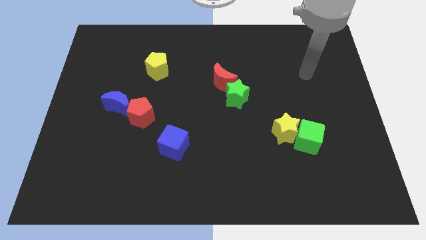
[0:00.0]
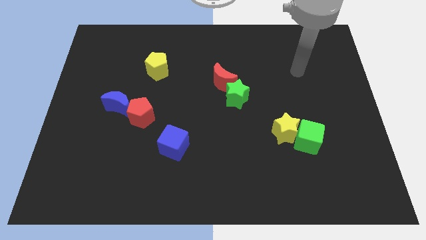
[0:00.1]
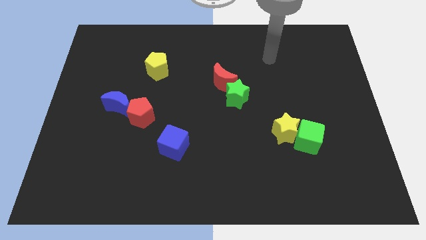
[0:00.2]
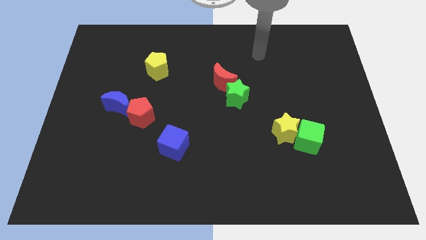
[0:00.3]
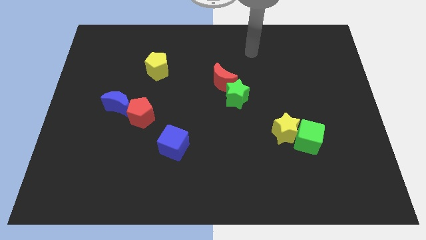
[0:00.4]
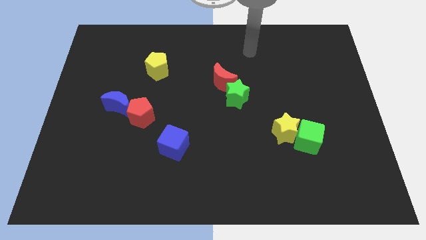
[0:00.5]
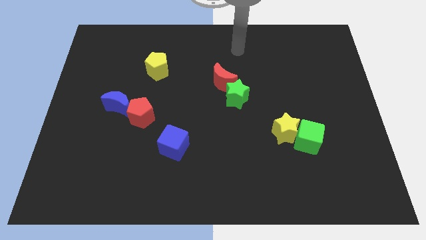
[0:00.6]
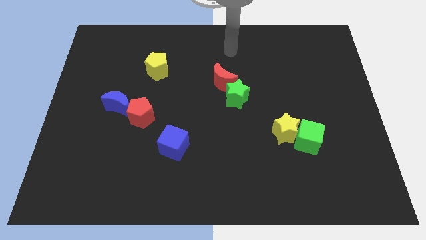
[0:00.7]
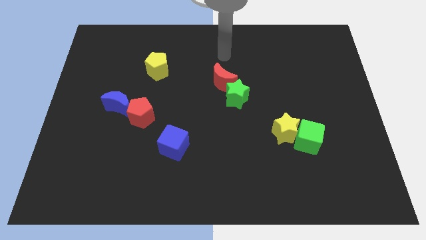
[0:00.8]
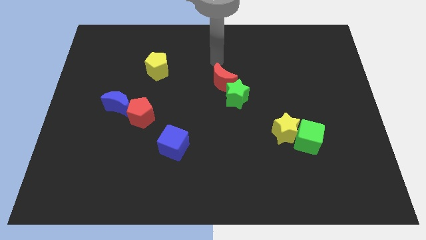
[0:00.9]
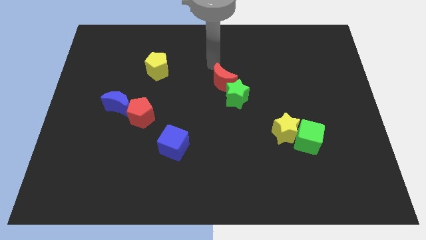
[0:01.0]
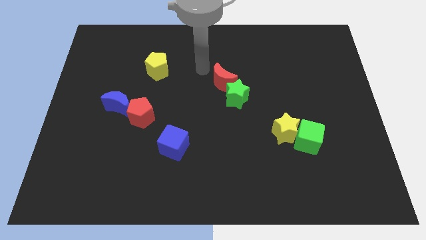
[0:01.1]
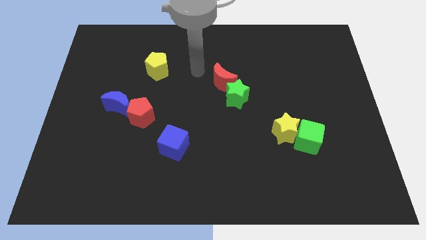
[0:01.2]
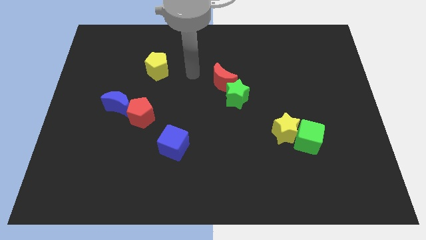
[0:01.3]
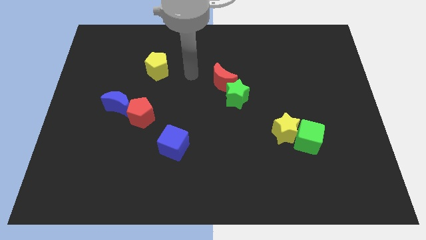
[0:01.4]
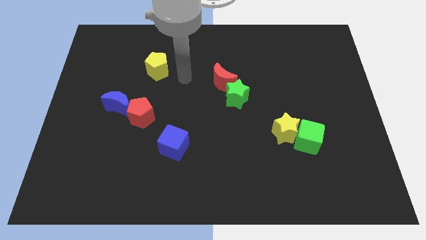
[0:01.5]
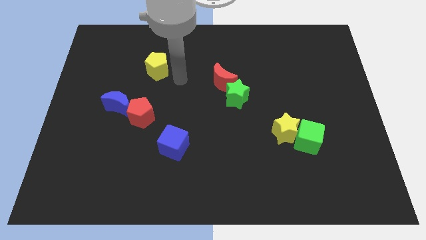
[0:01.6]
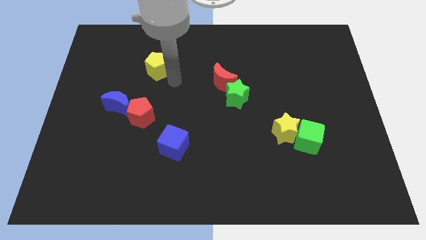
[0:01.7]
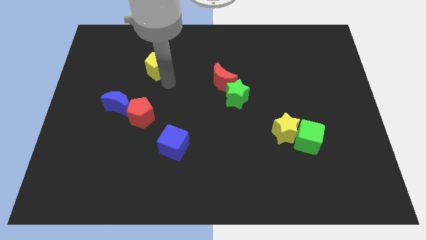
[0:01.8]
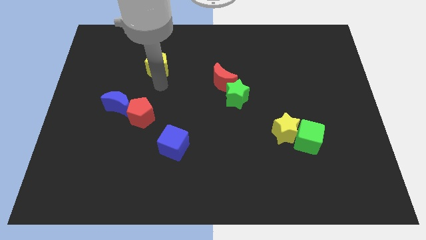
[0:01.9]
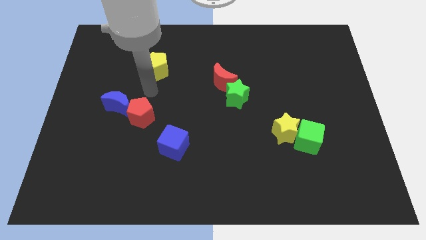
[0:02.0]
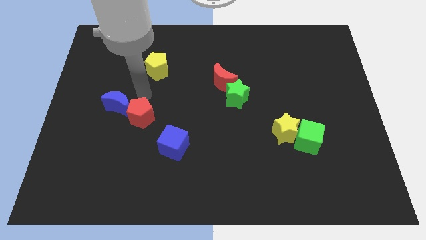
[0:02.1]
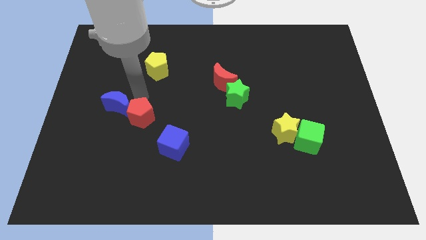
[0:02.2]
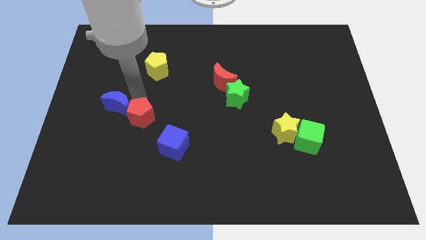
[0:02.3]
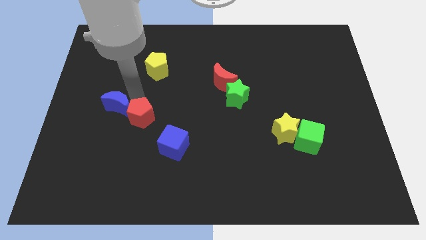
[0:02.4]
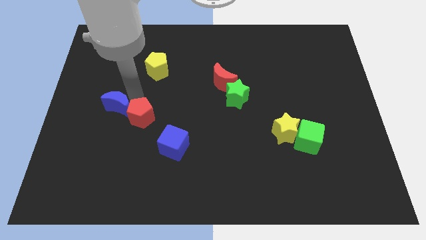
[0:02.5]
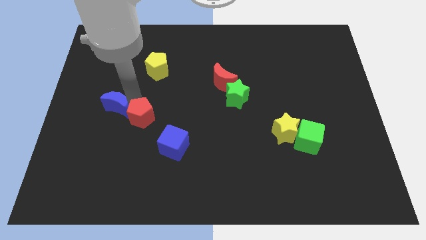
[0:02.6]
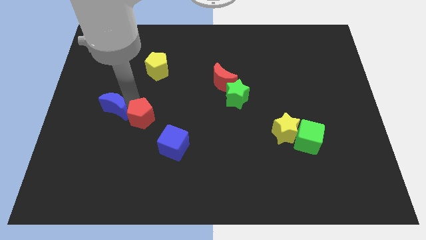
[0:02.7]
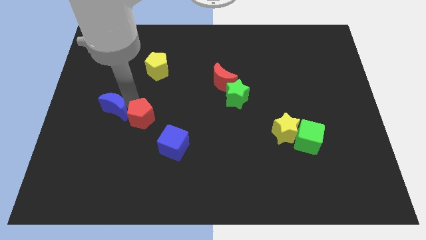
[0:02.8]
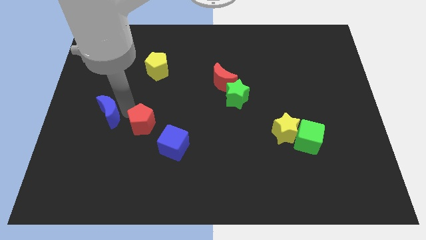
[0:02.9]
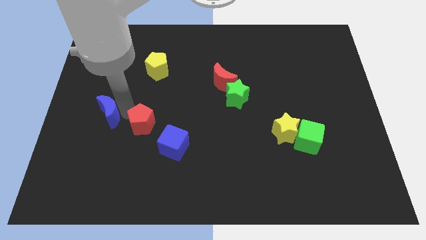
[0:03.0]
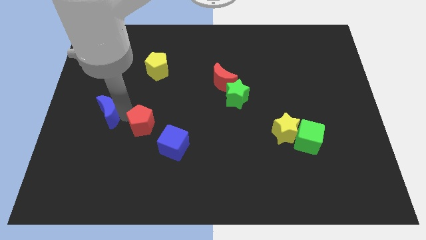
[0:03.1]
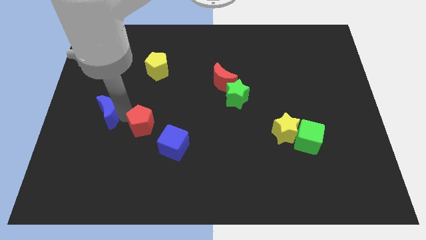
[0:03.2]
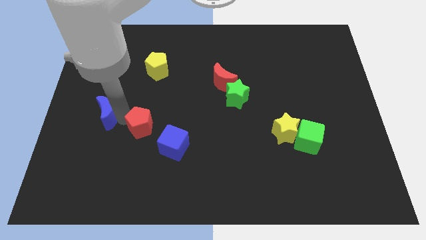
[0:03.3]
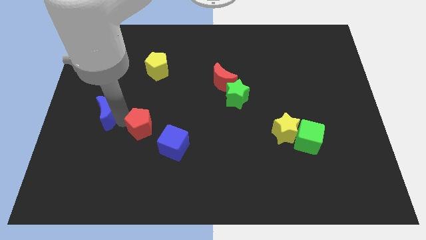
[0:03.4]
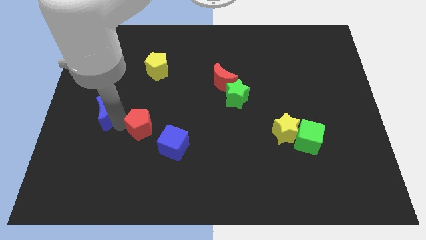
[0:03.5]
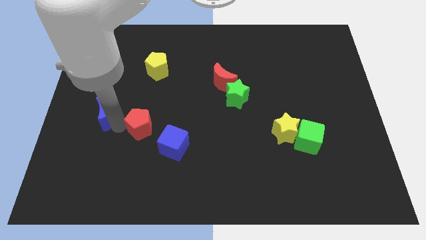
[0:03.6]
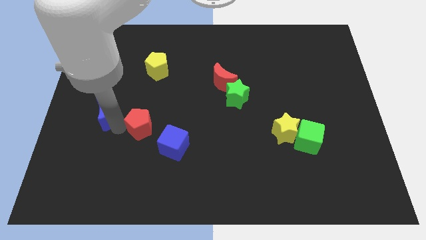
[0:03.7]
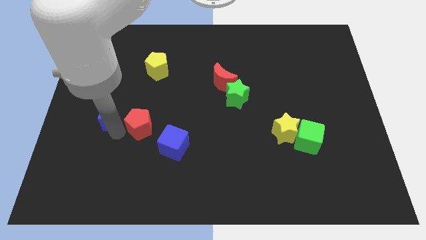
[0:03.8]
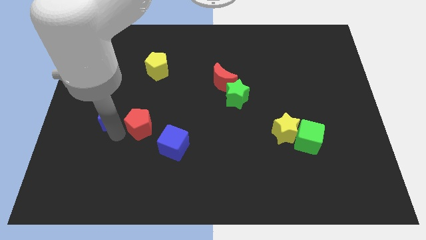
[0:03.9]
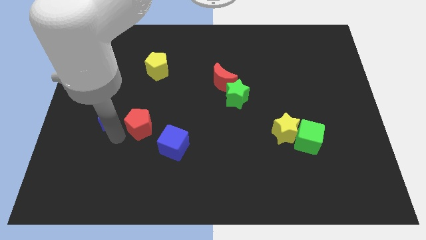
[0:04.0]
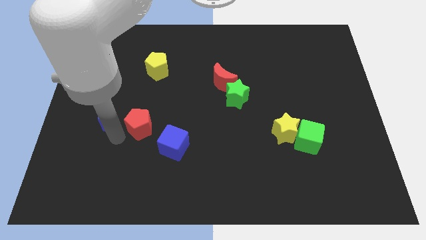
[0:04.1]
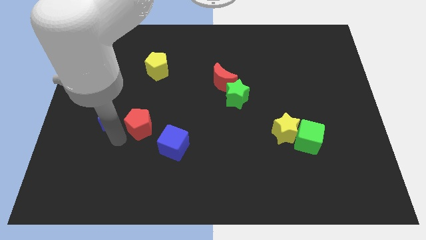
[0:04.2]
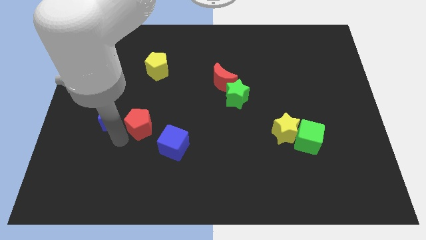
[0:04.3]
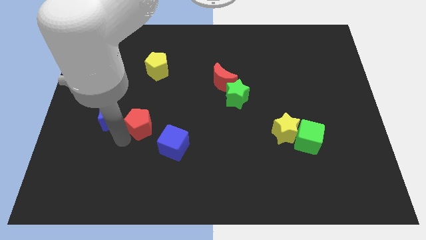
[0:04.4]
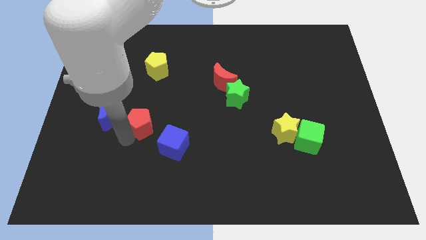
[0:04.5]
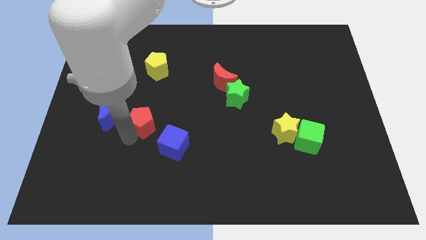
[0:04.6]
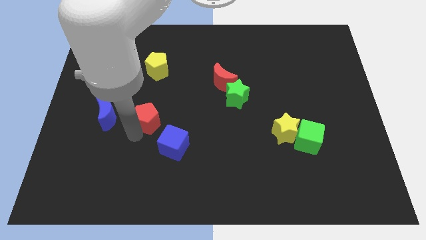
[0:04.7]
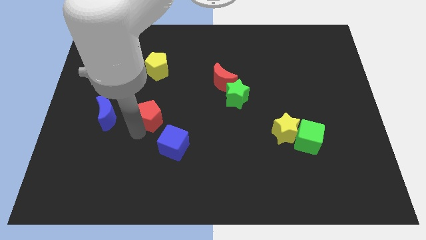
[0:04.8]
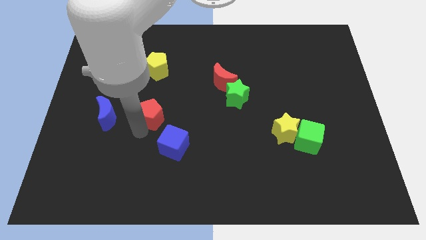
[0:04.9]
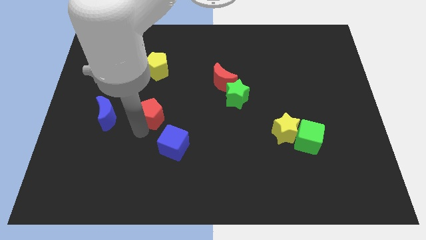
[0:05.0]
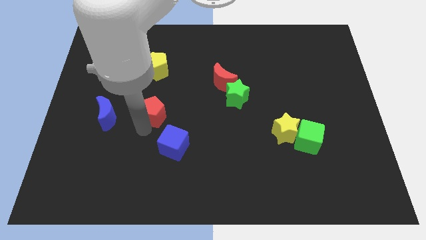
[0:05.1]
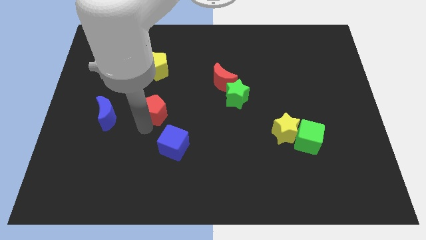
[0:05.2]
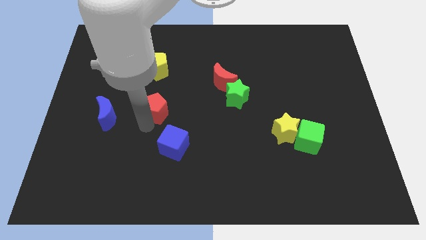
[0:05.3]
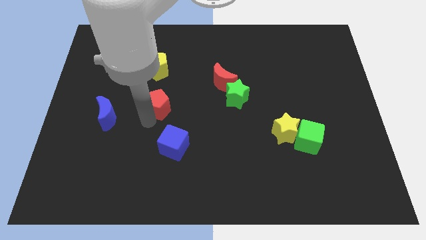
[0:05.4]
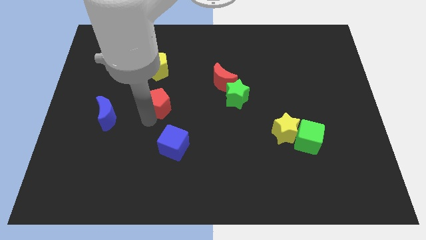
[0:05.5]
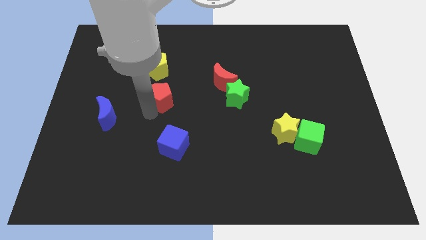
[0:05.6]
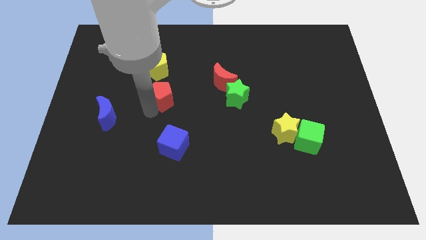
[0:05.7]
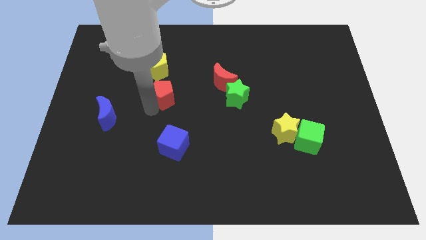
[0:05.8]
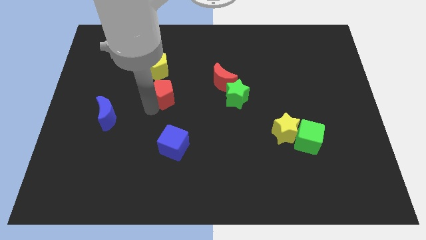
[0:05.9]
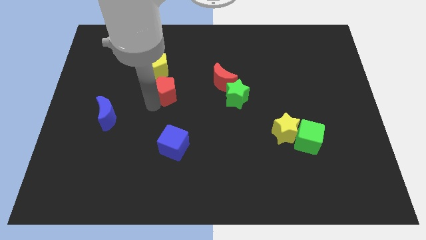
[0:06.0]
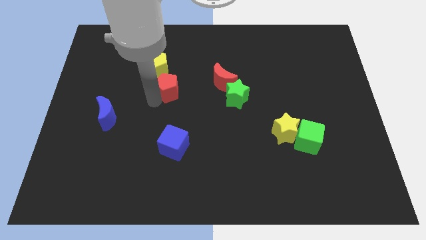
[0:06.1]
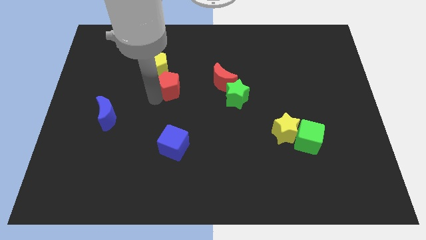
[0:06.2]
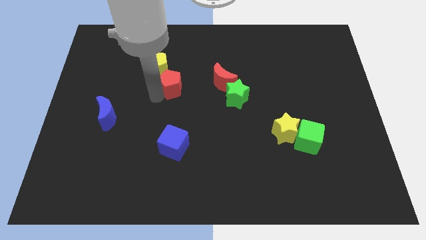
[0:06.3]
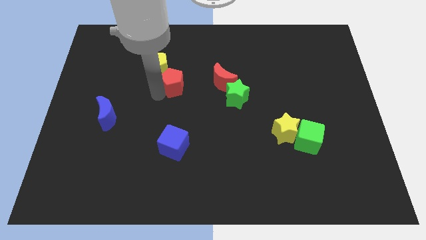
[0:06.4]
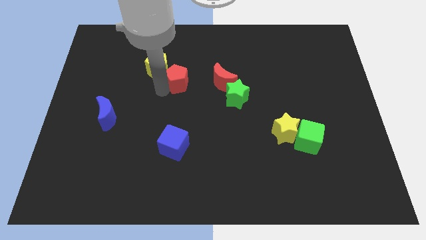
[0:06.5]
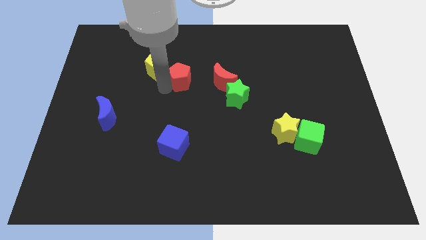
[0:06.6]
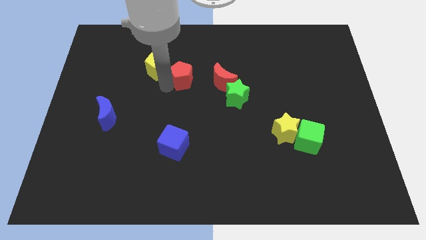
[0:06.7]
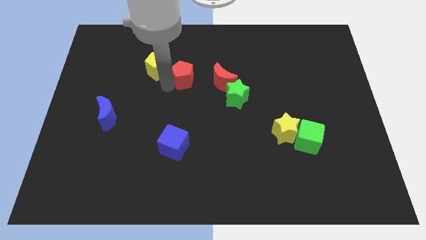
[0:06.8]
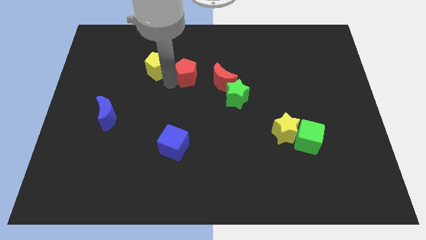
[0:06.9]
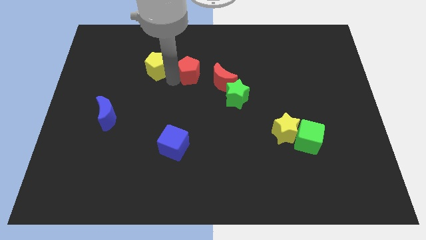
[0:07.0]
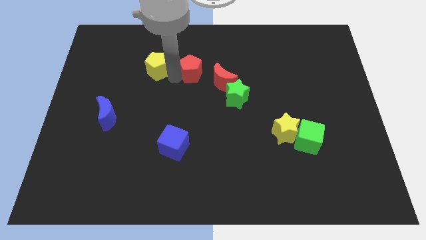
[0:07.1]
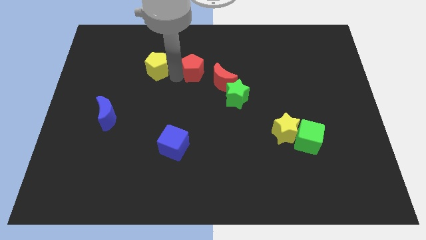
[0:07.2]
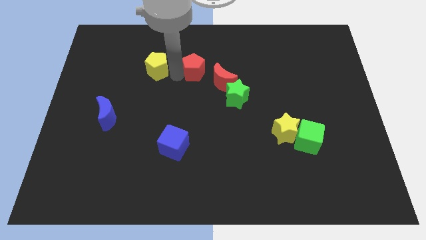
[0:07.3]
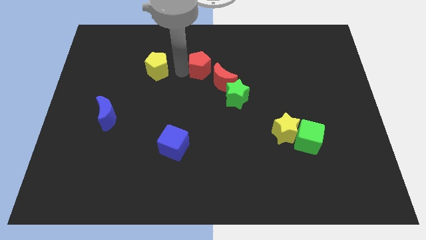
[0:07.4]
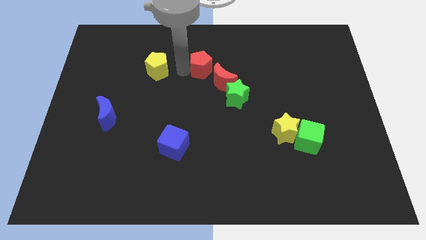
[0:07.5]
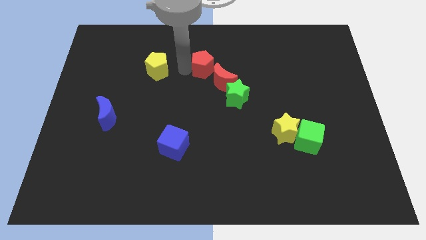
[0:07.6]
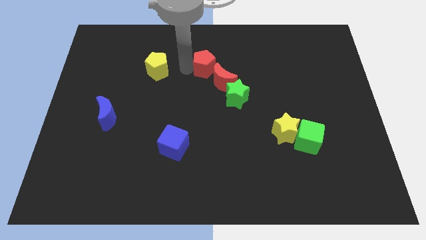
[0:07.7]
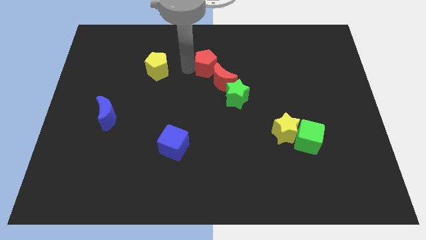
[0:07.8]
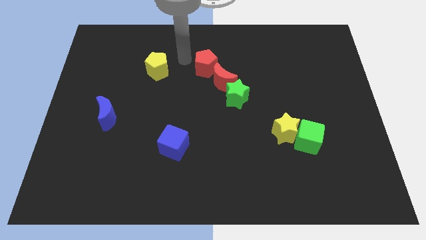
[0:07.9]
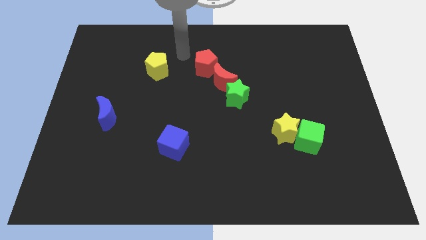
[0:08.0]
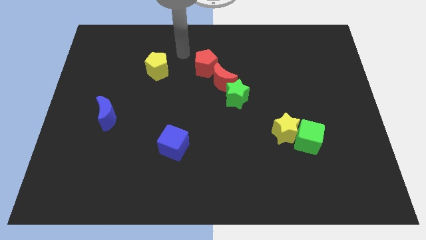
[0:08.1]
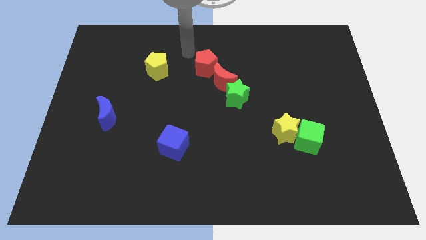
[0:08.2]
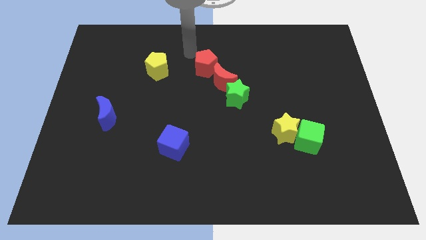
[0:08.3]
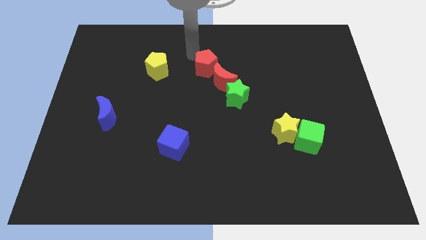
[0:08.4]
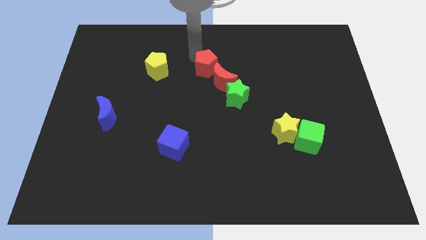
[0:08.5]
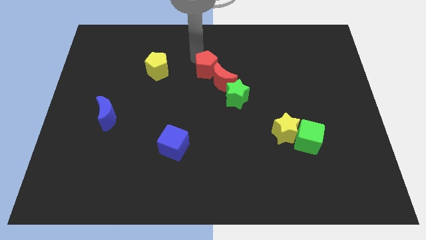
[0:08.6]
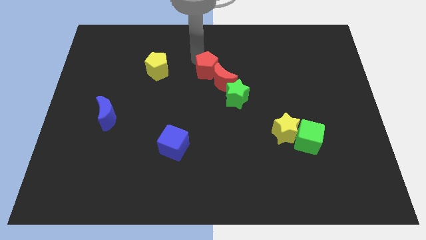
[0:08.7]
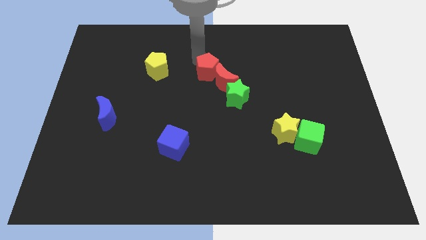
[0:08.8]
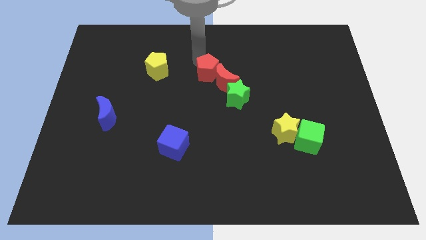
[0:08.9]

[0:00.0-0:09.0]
slide the red pentagon close to the red moon
